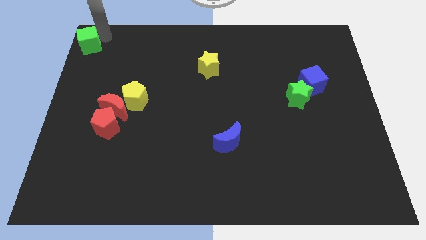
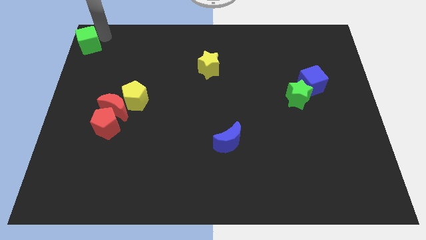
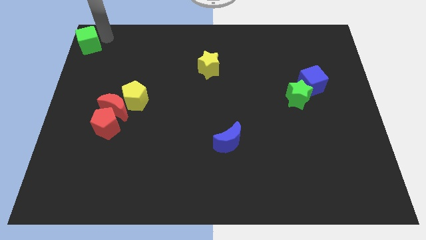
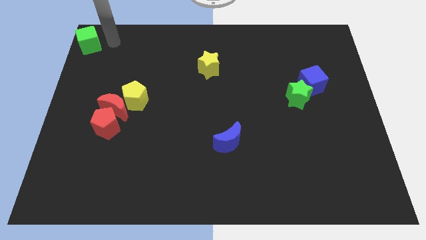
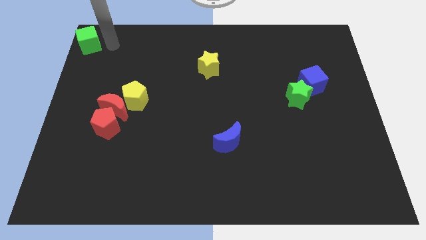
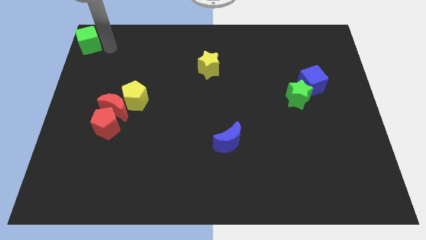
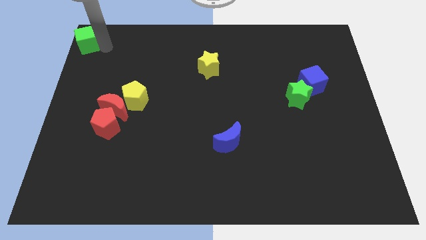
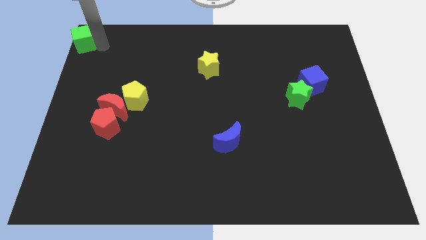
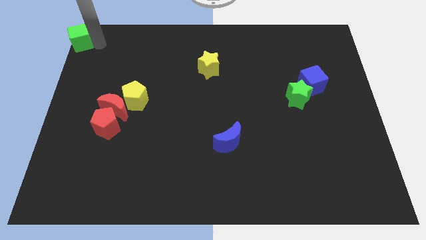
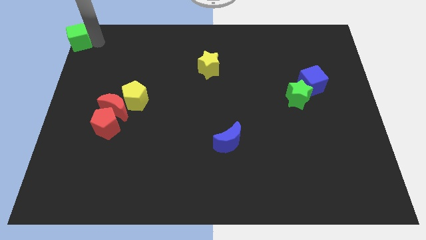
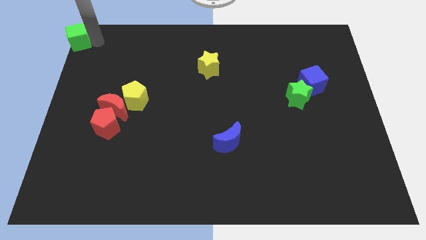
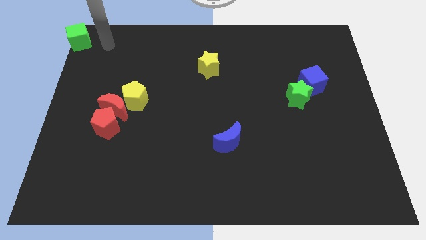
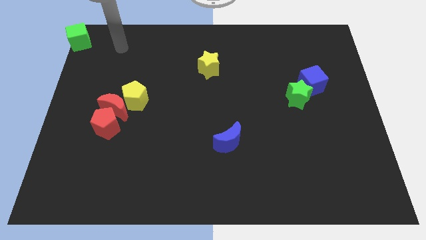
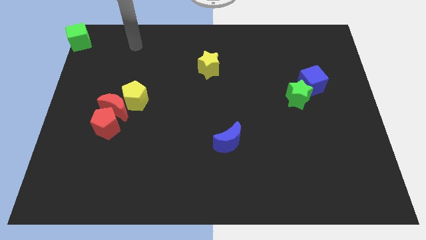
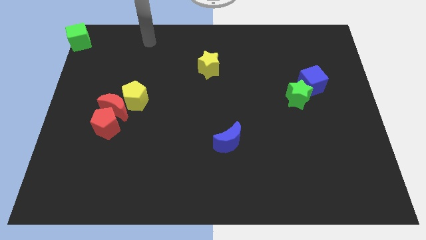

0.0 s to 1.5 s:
move the arm away from the green cube

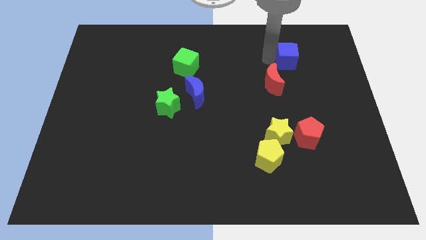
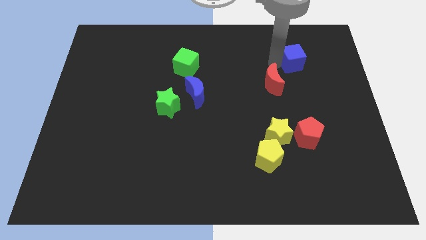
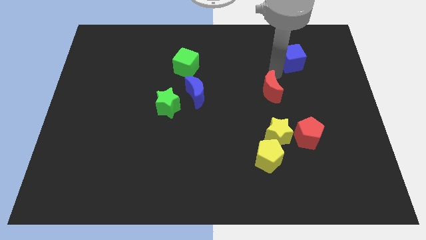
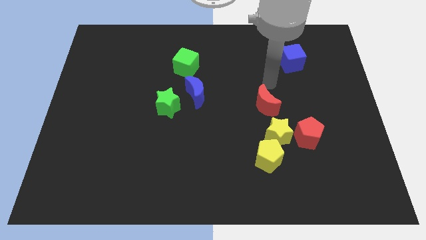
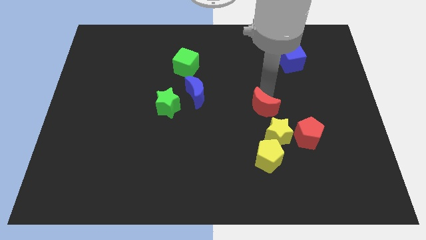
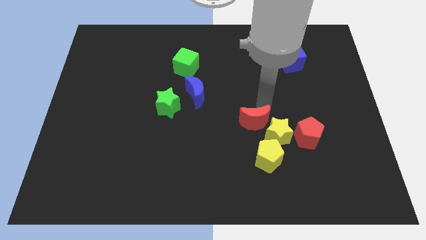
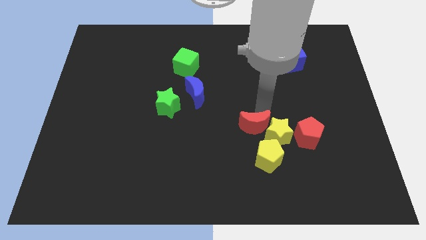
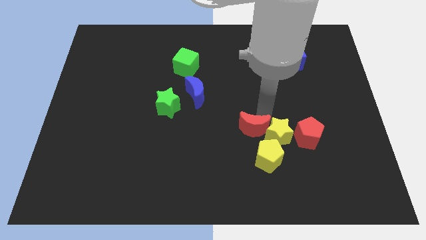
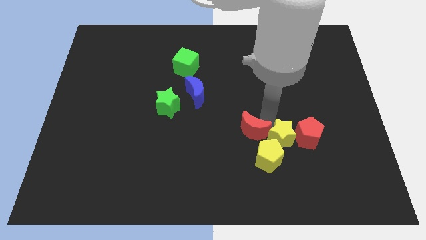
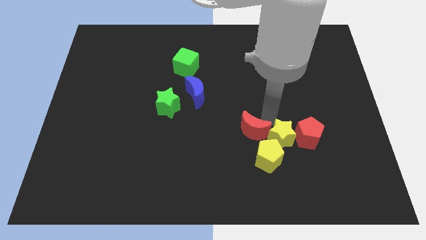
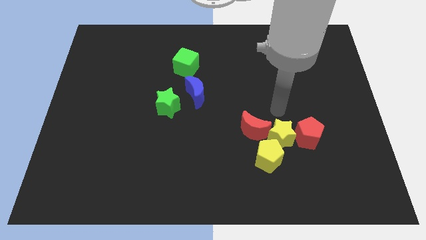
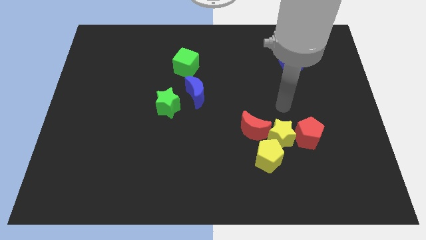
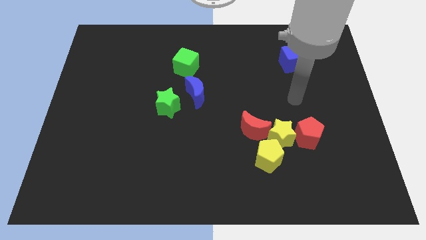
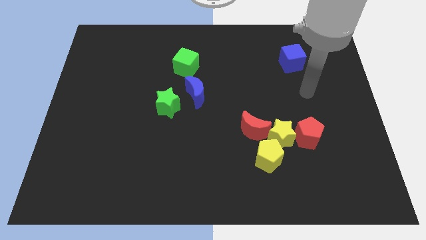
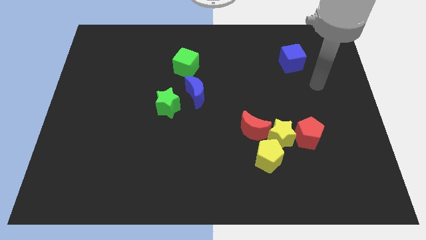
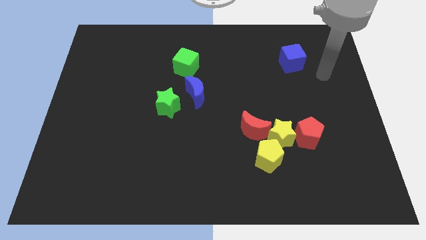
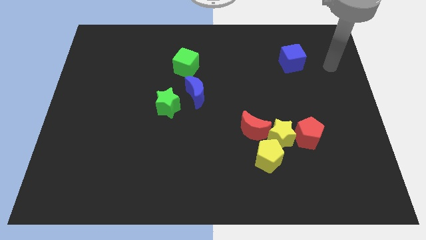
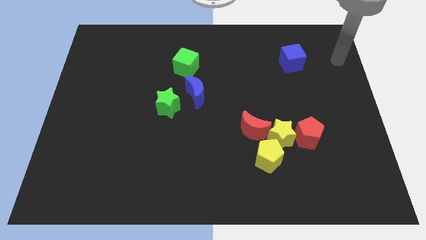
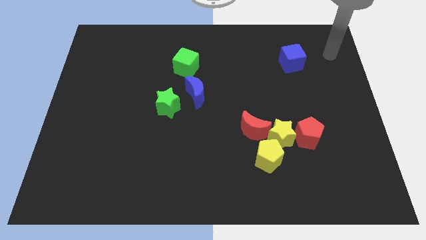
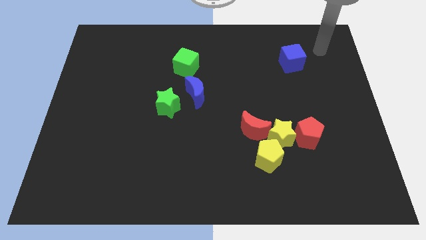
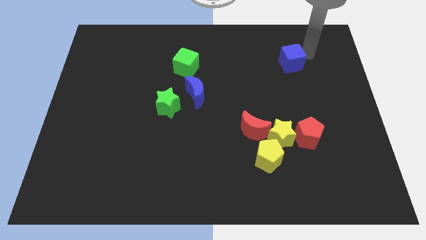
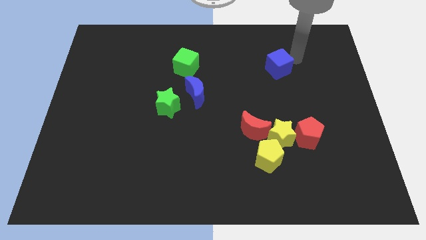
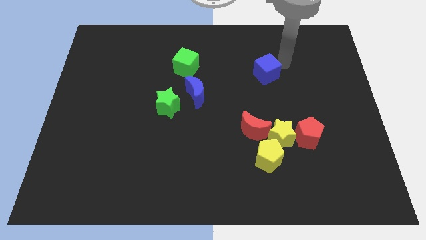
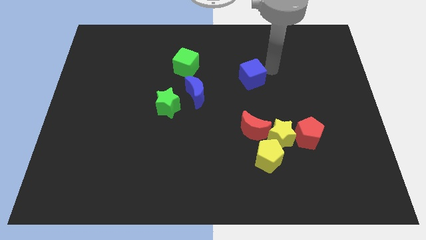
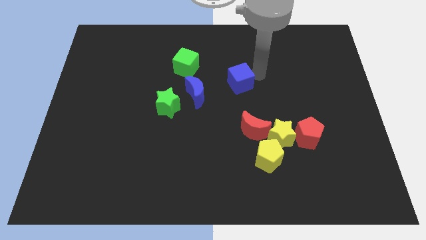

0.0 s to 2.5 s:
move the blue cube parallel to the top of the red moon

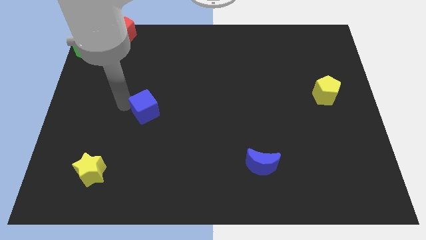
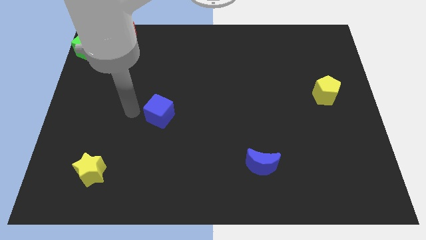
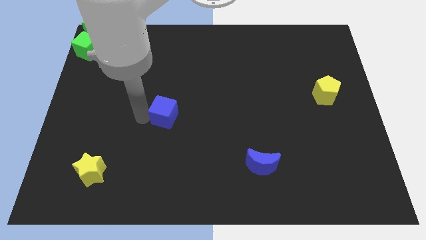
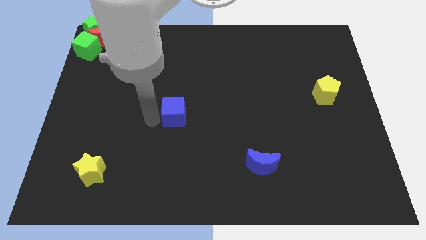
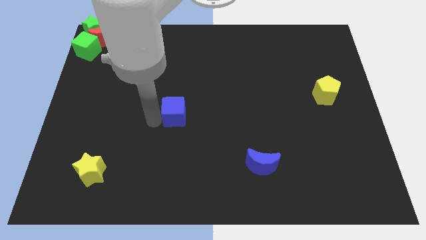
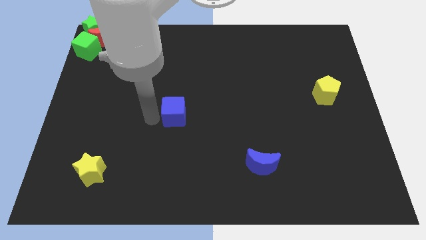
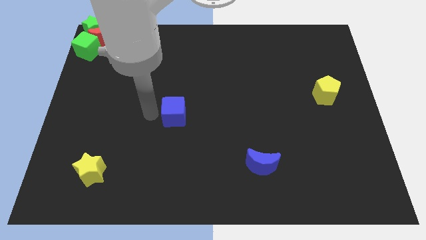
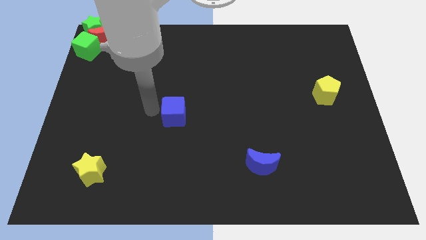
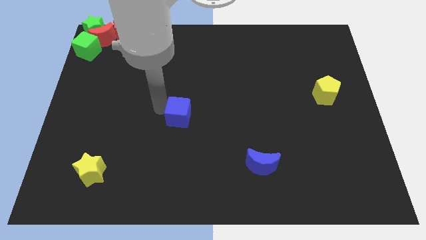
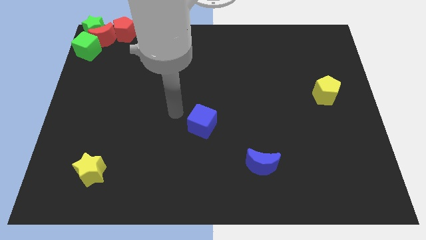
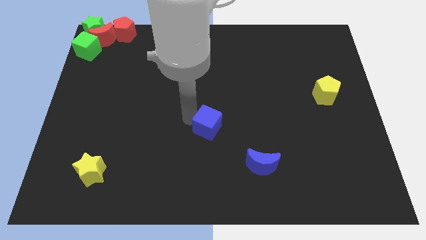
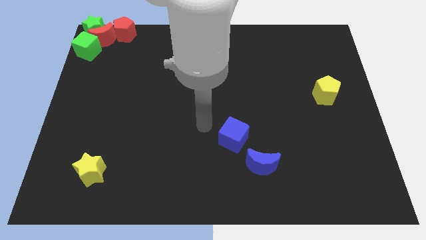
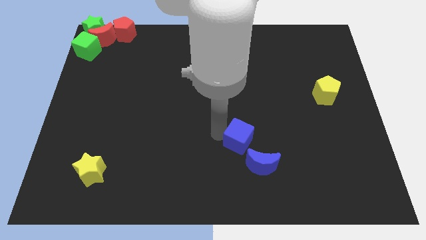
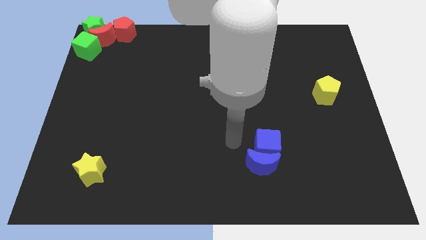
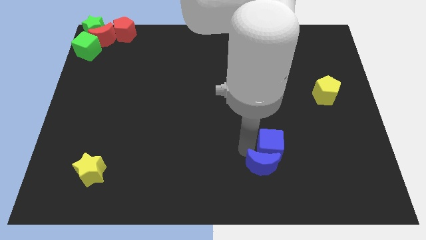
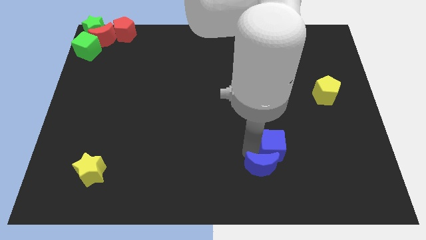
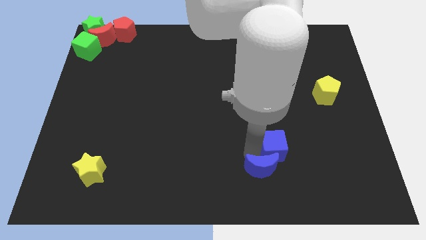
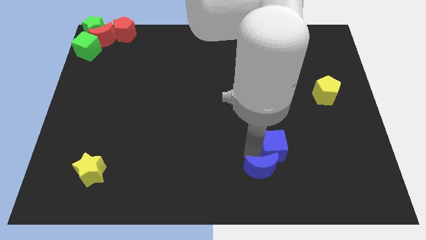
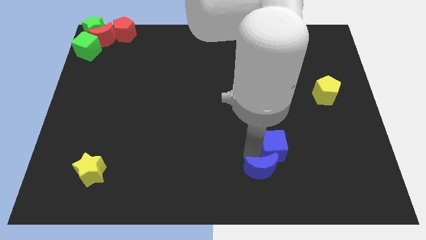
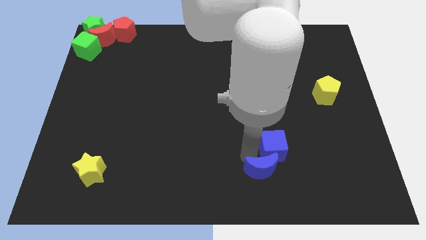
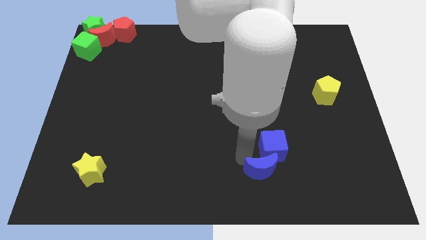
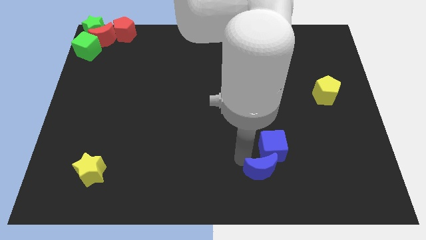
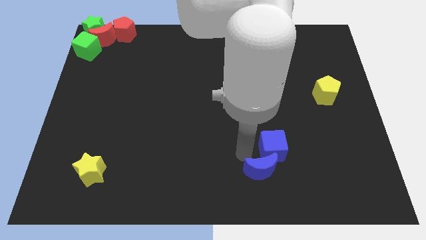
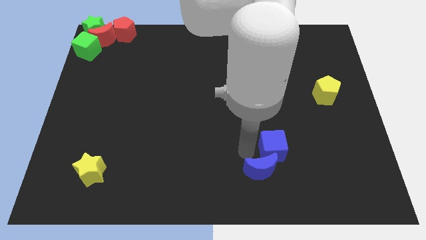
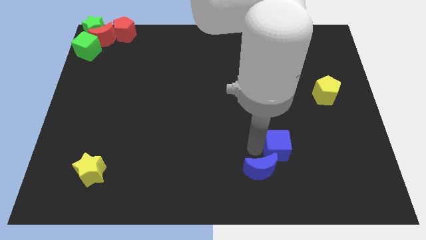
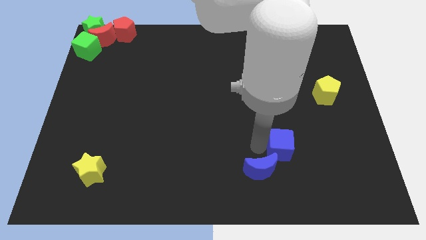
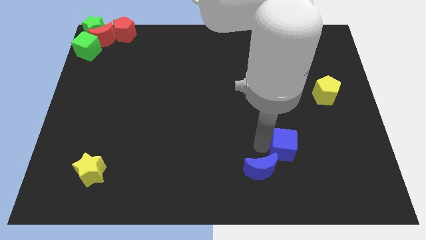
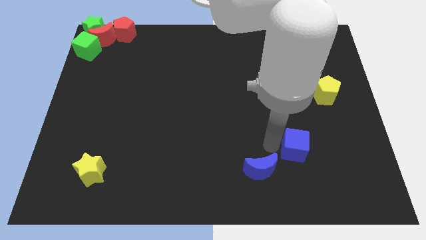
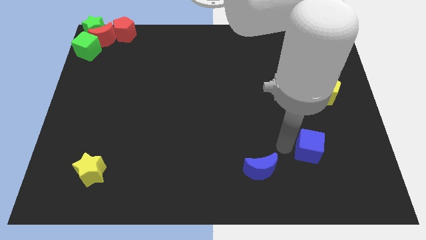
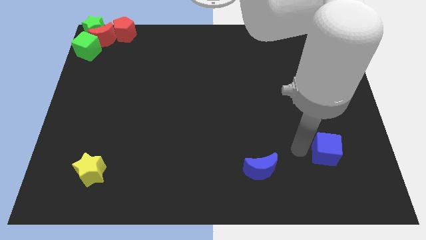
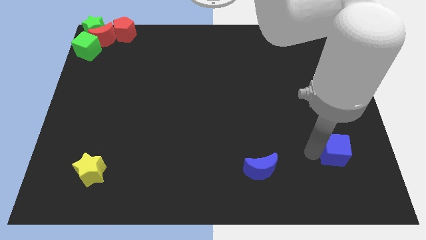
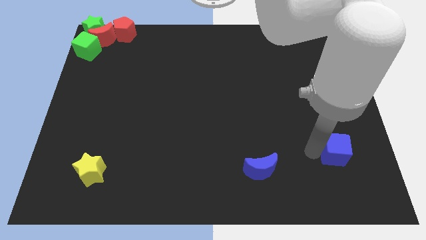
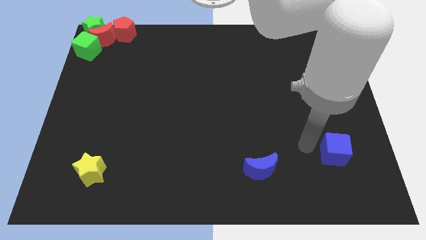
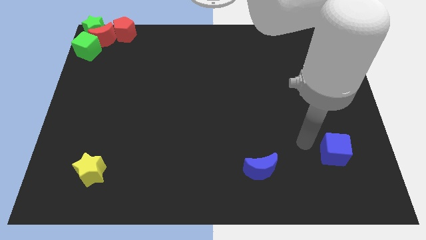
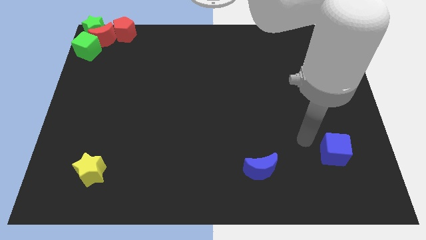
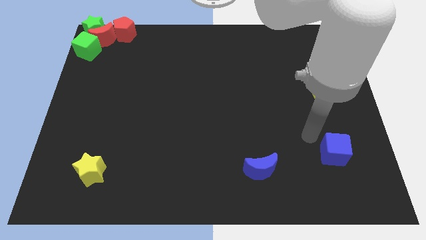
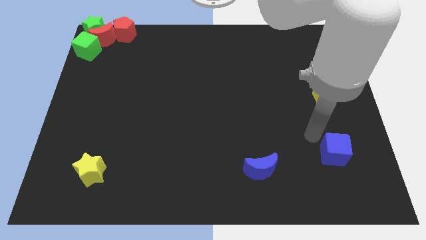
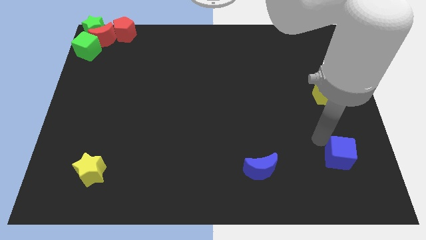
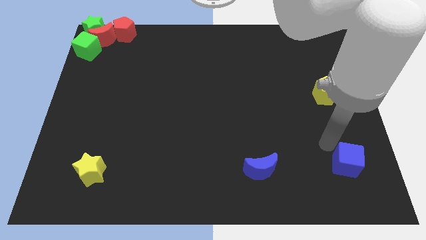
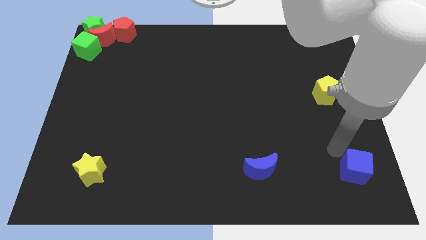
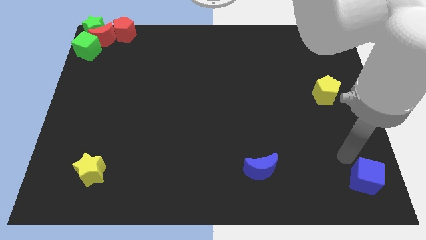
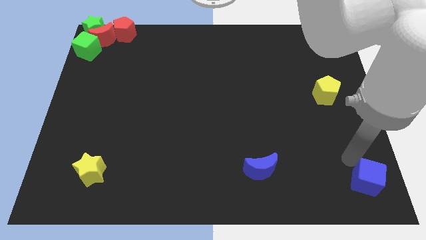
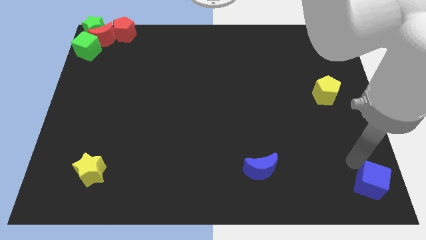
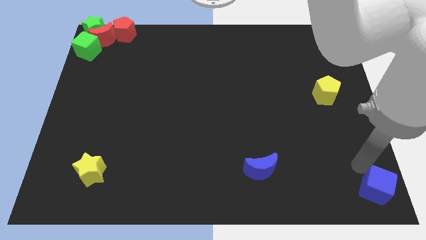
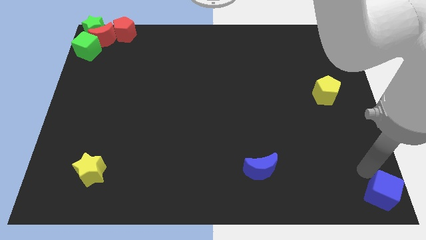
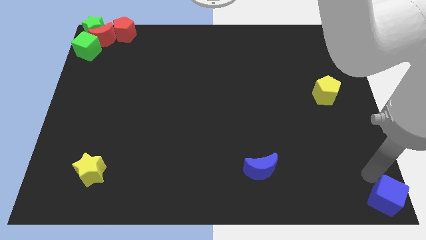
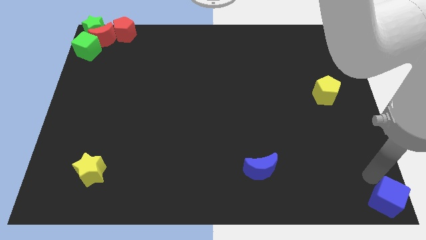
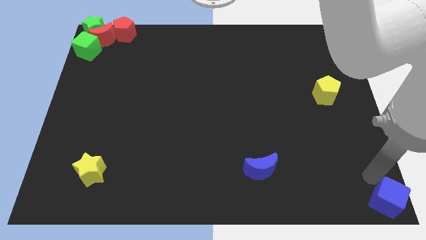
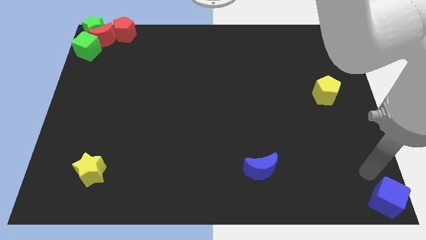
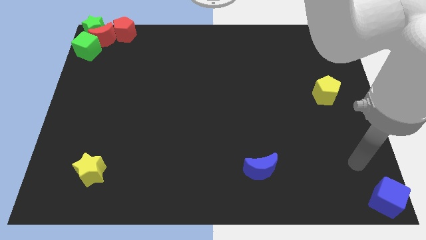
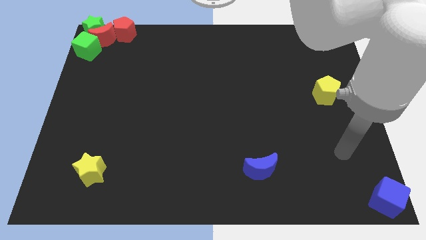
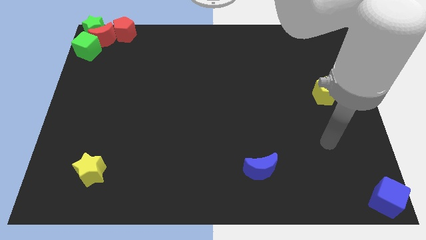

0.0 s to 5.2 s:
place the blue at the bottom right corner of the board
